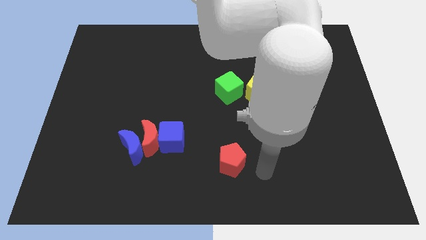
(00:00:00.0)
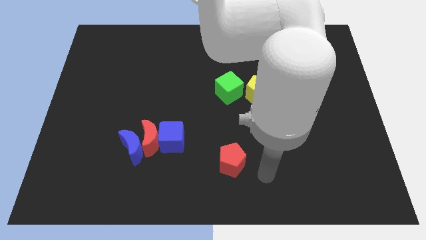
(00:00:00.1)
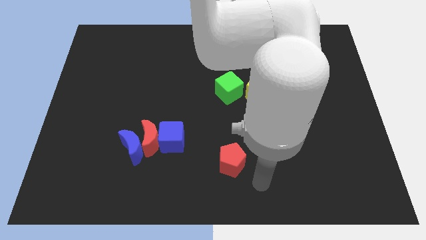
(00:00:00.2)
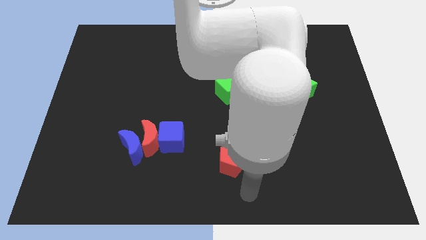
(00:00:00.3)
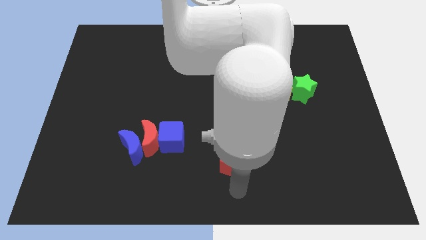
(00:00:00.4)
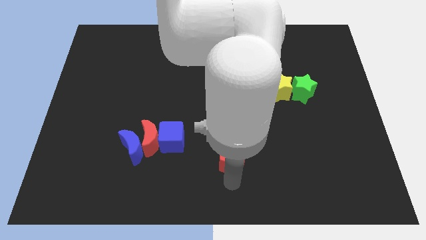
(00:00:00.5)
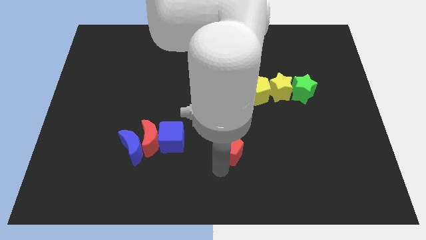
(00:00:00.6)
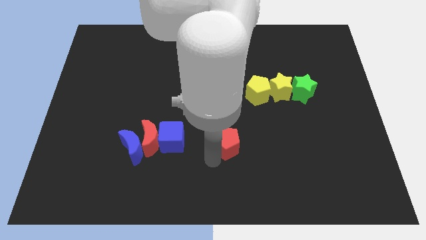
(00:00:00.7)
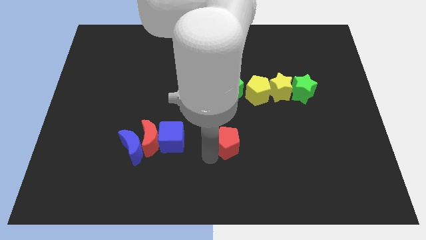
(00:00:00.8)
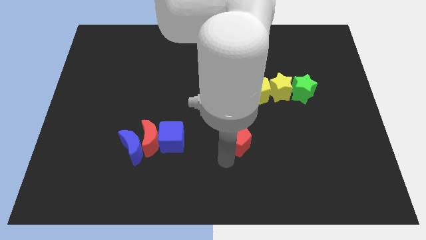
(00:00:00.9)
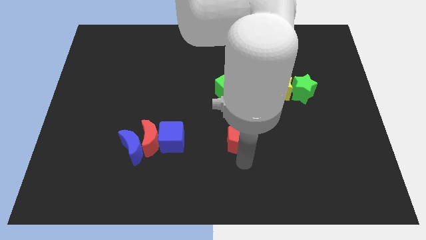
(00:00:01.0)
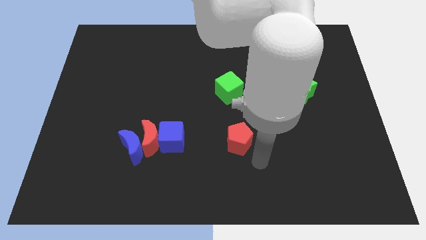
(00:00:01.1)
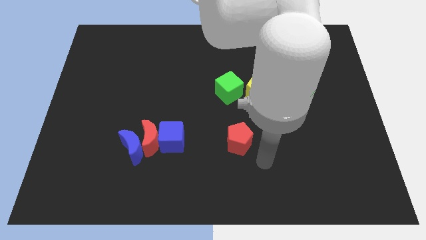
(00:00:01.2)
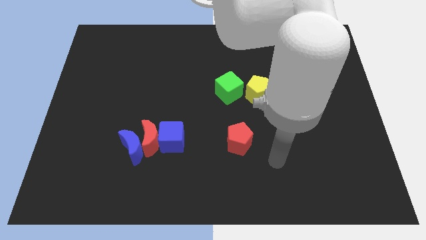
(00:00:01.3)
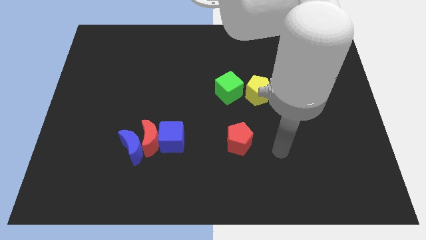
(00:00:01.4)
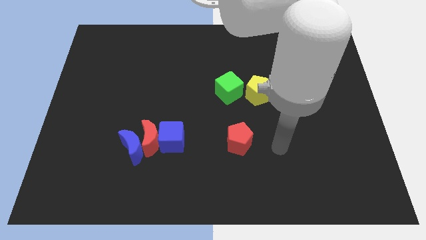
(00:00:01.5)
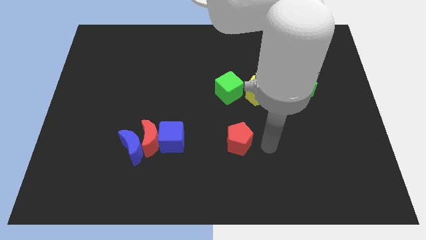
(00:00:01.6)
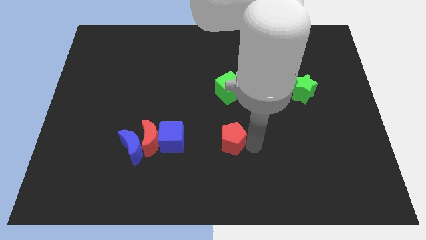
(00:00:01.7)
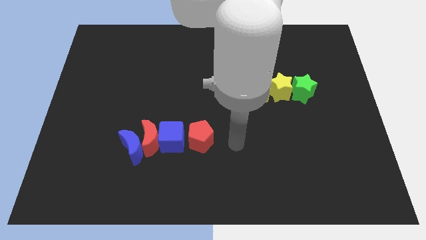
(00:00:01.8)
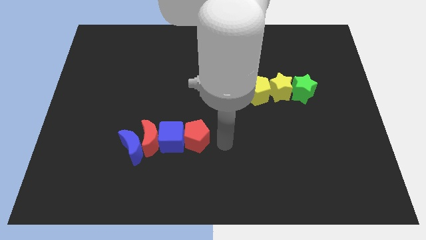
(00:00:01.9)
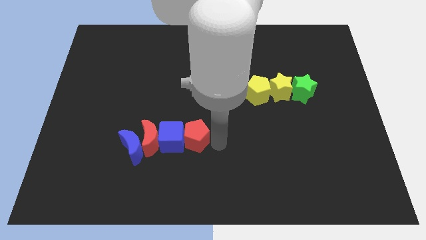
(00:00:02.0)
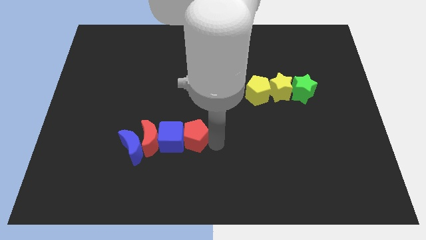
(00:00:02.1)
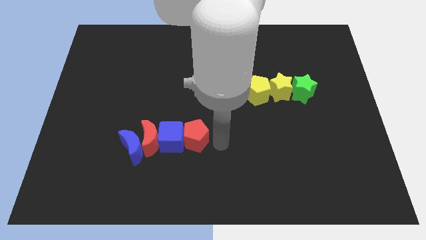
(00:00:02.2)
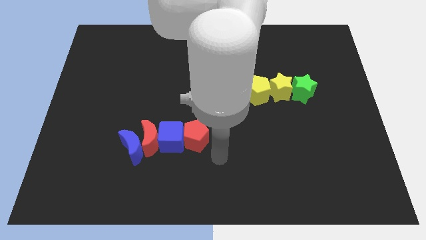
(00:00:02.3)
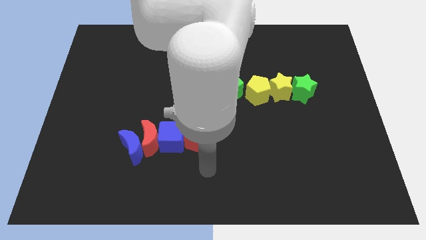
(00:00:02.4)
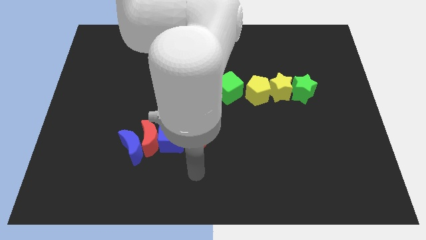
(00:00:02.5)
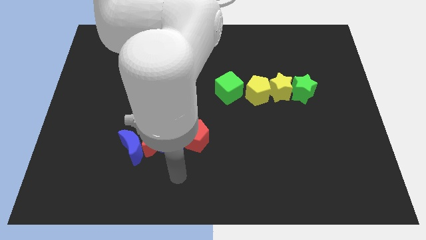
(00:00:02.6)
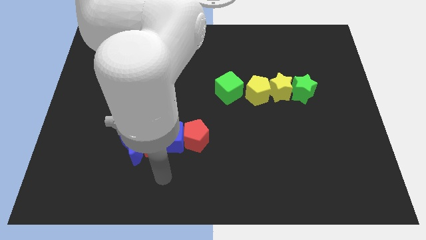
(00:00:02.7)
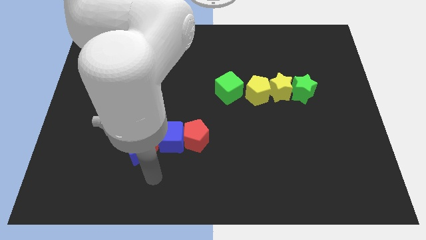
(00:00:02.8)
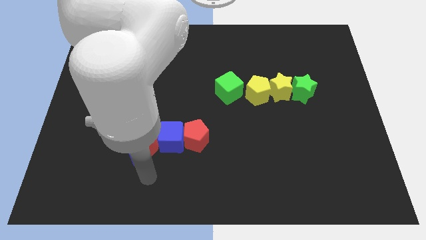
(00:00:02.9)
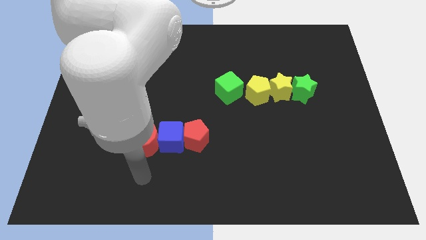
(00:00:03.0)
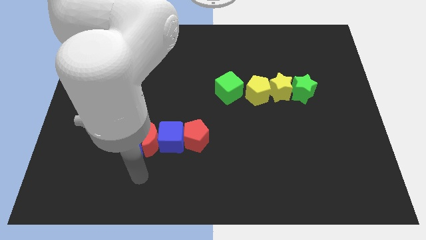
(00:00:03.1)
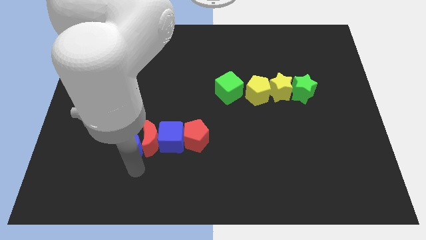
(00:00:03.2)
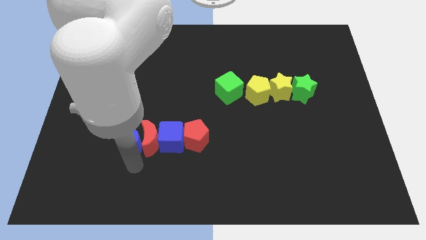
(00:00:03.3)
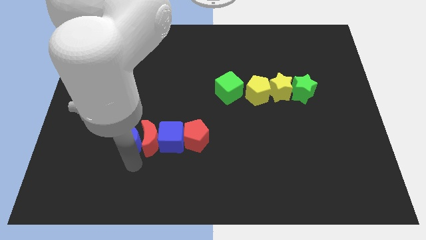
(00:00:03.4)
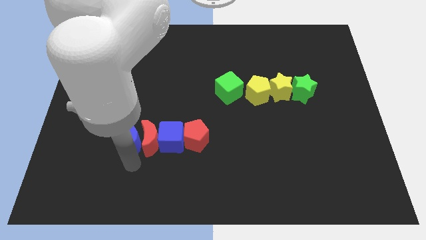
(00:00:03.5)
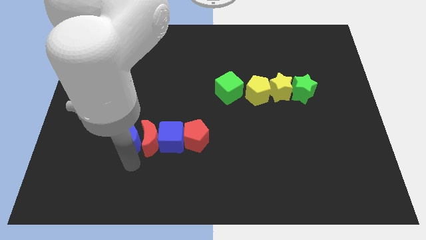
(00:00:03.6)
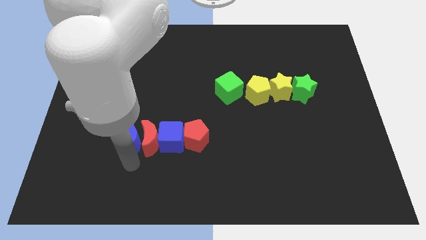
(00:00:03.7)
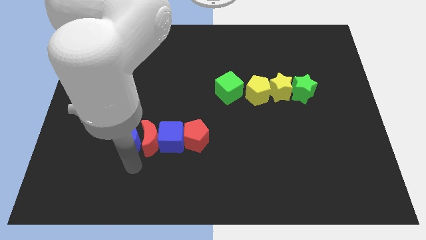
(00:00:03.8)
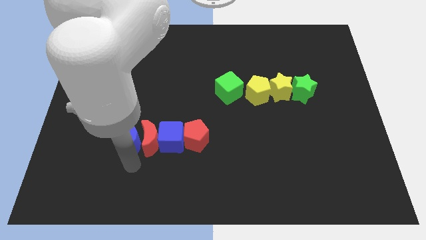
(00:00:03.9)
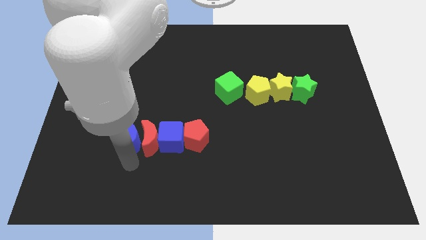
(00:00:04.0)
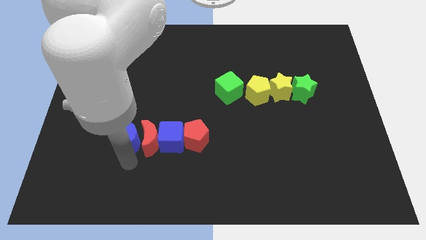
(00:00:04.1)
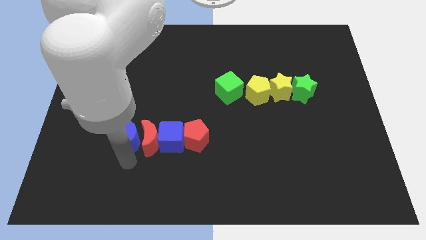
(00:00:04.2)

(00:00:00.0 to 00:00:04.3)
place the red pentagon right of the blue cube

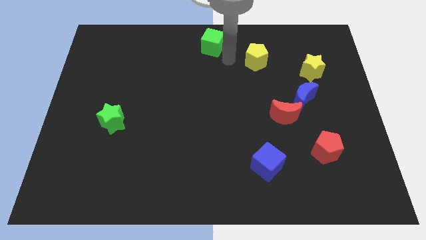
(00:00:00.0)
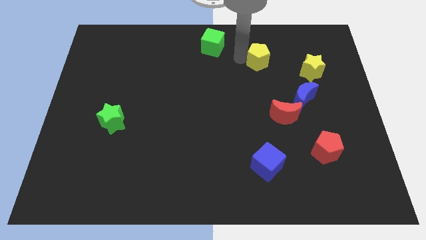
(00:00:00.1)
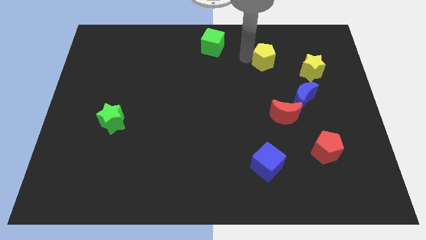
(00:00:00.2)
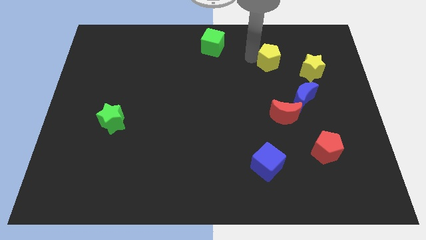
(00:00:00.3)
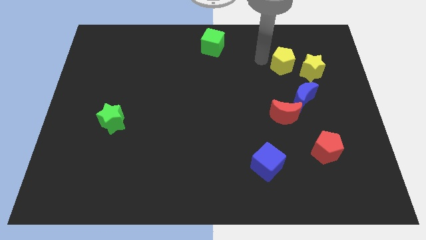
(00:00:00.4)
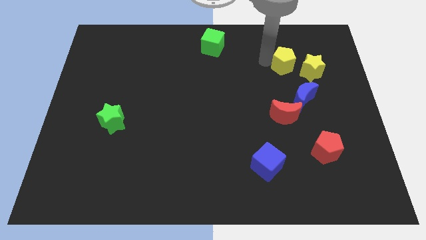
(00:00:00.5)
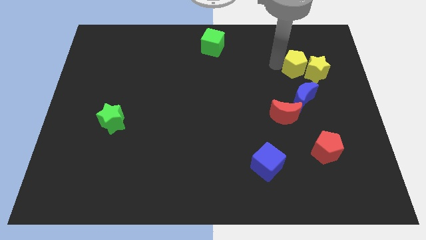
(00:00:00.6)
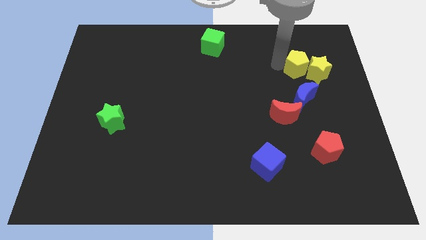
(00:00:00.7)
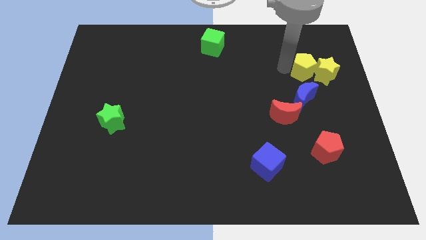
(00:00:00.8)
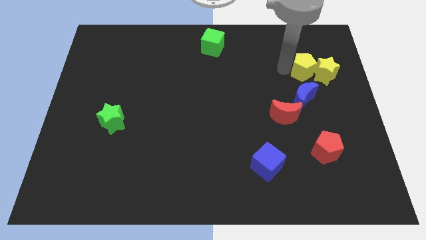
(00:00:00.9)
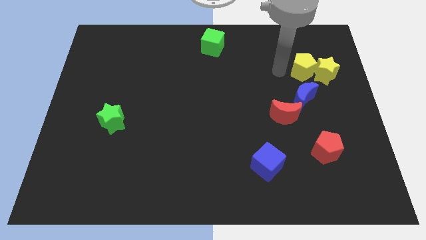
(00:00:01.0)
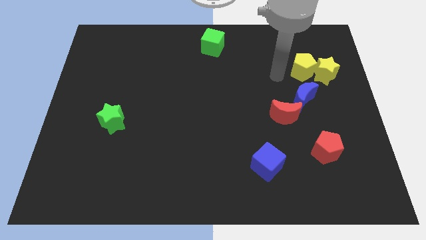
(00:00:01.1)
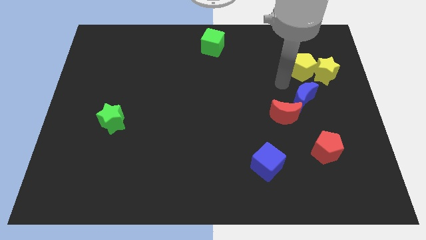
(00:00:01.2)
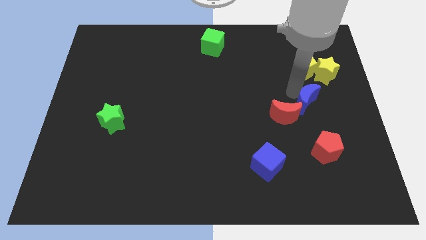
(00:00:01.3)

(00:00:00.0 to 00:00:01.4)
move the yellow pentagon into the yellow star

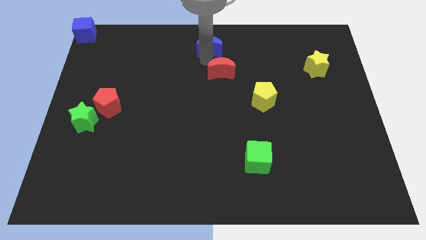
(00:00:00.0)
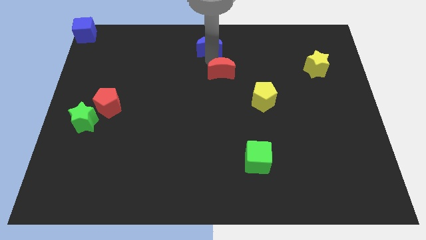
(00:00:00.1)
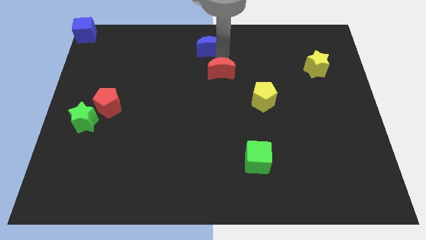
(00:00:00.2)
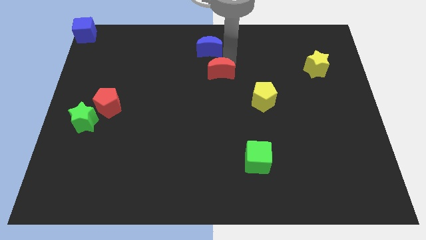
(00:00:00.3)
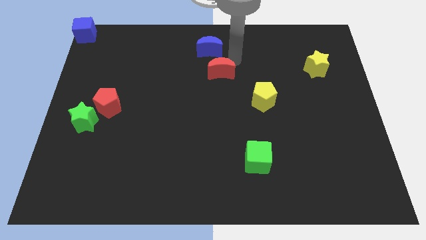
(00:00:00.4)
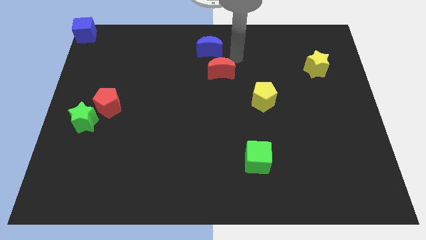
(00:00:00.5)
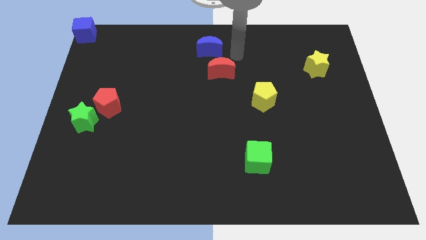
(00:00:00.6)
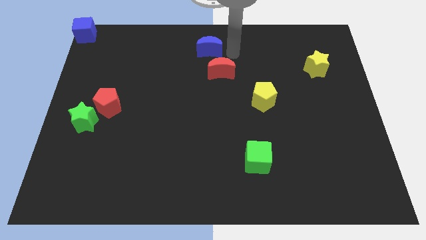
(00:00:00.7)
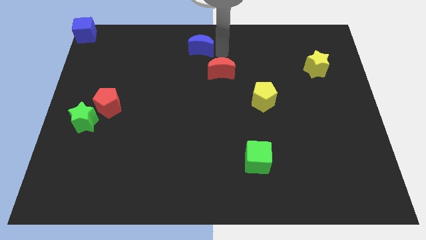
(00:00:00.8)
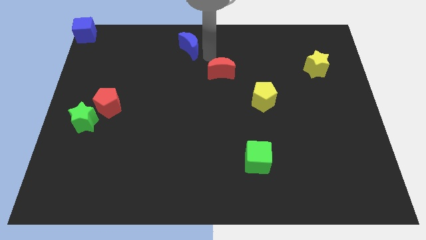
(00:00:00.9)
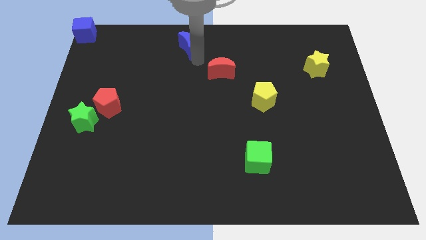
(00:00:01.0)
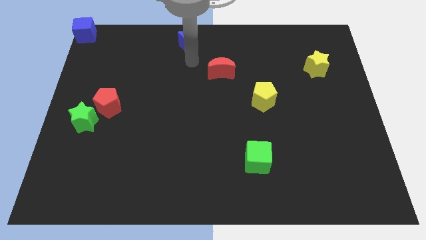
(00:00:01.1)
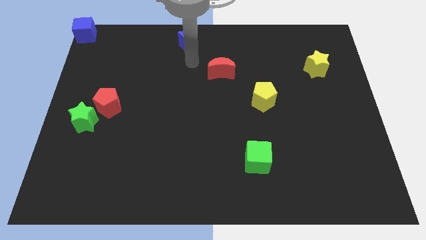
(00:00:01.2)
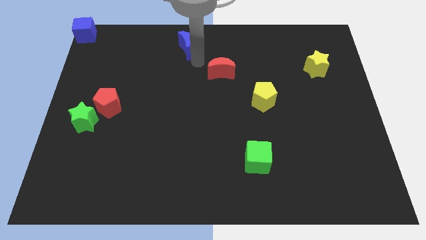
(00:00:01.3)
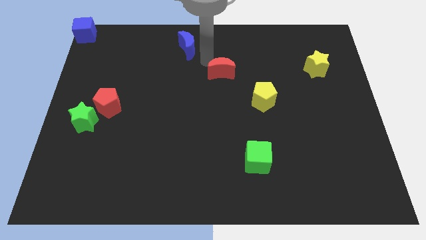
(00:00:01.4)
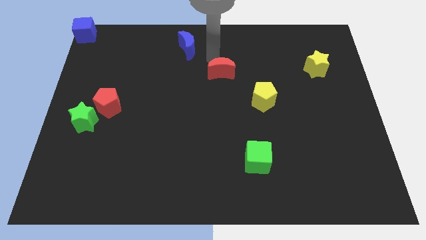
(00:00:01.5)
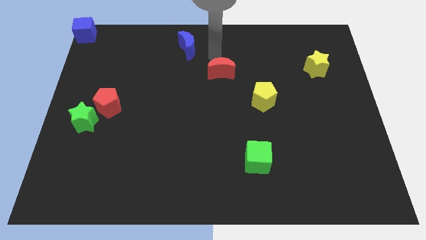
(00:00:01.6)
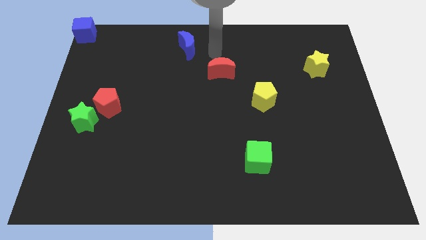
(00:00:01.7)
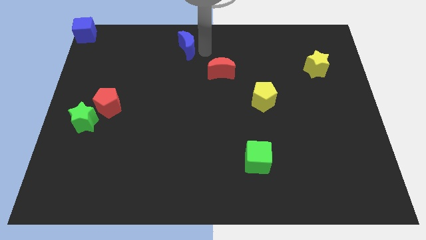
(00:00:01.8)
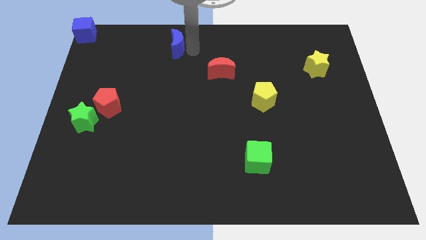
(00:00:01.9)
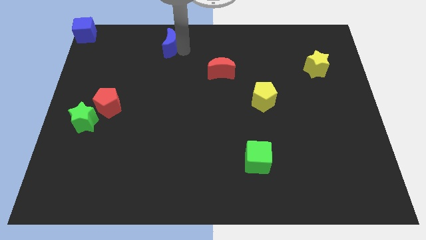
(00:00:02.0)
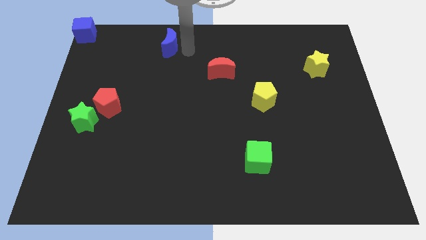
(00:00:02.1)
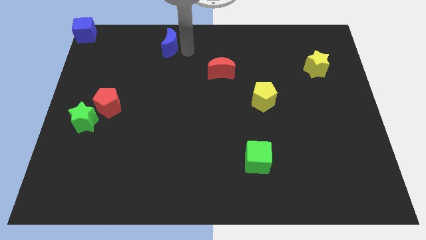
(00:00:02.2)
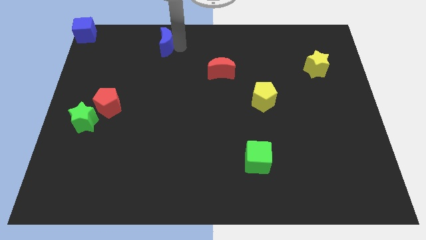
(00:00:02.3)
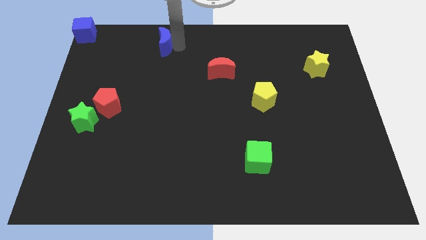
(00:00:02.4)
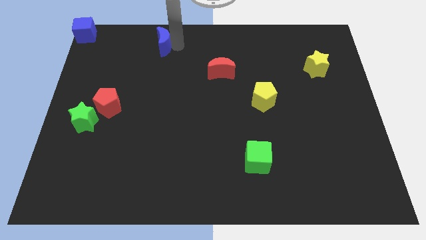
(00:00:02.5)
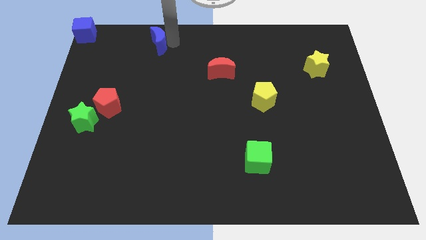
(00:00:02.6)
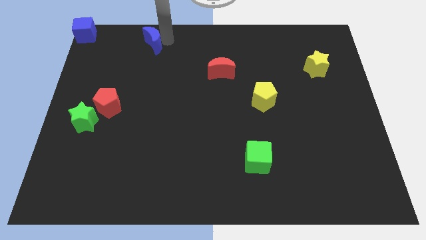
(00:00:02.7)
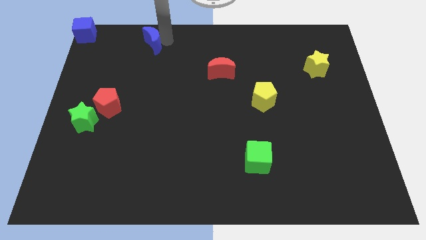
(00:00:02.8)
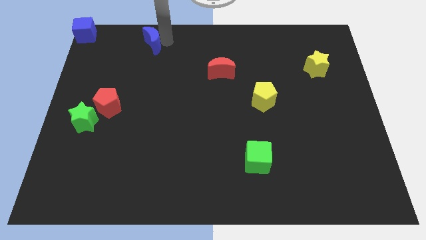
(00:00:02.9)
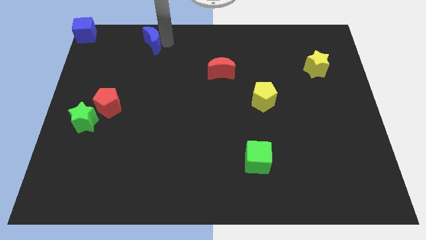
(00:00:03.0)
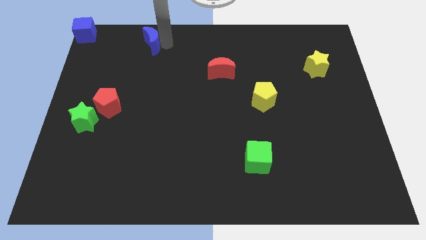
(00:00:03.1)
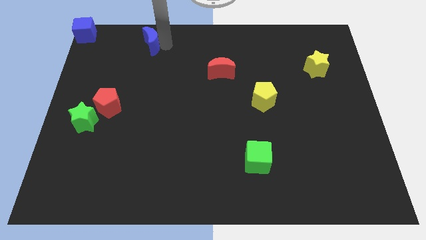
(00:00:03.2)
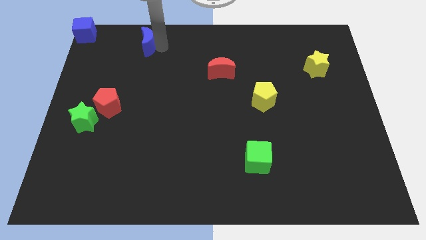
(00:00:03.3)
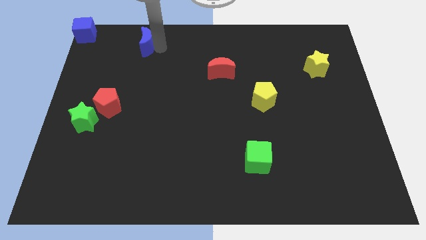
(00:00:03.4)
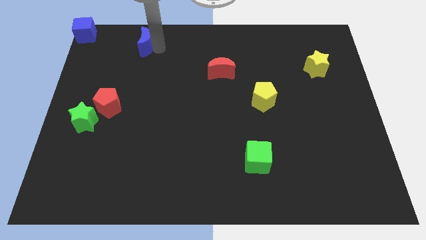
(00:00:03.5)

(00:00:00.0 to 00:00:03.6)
move the blue crescent towards the blue cube
